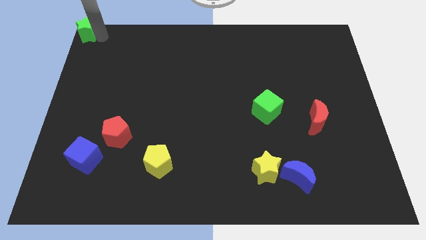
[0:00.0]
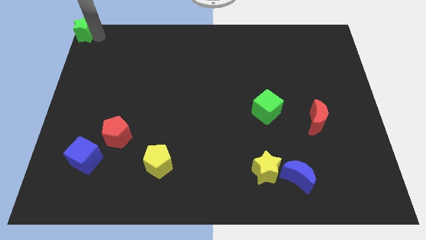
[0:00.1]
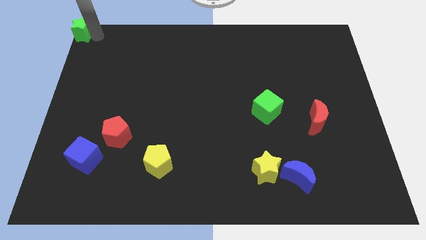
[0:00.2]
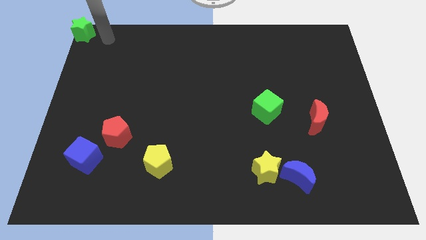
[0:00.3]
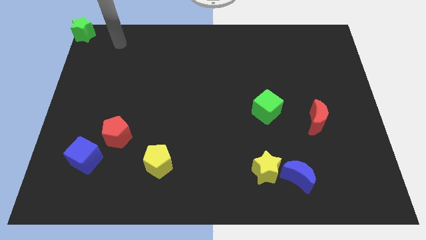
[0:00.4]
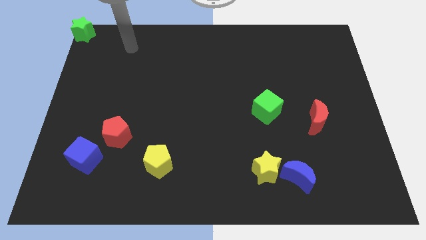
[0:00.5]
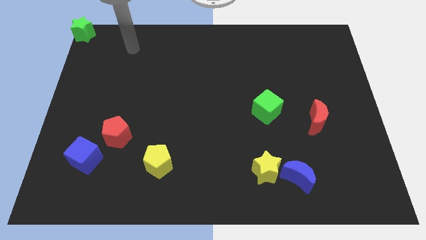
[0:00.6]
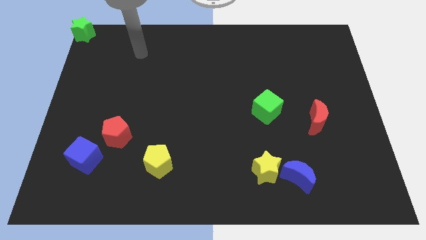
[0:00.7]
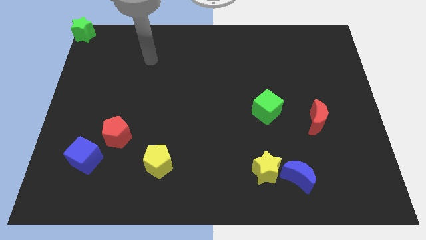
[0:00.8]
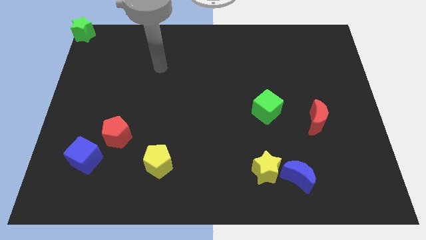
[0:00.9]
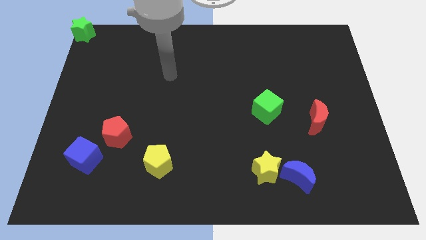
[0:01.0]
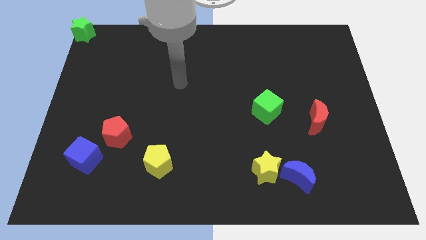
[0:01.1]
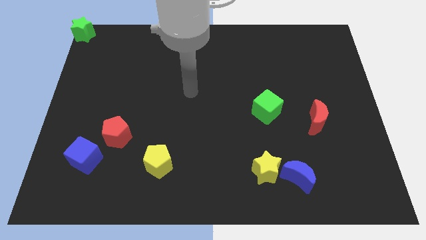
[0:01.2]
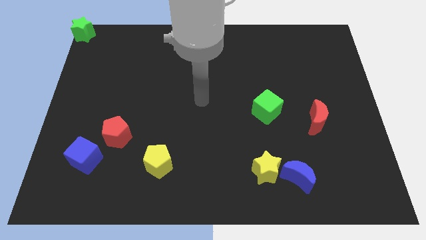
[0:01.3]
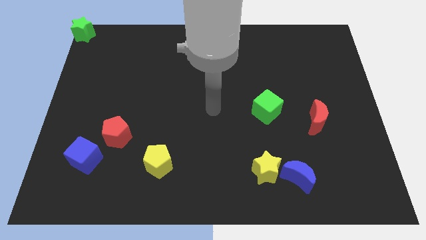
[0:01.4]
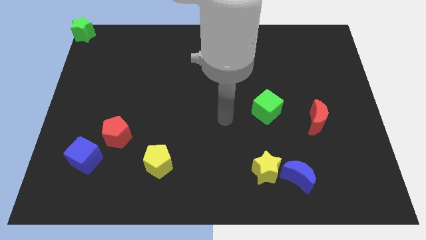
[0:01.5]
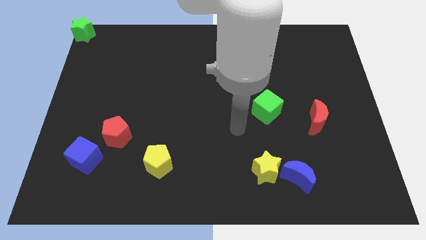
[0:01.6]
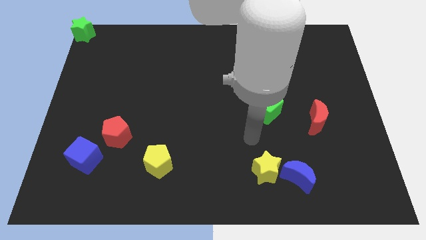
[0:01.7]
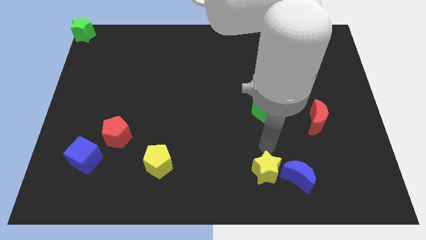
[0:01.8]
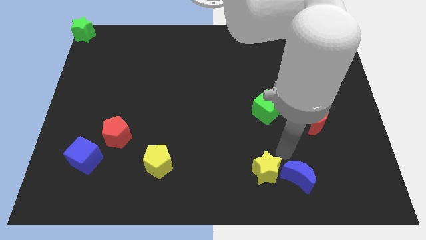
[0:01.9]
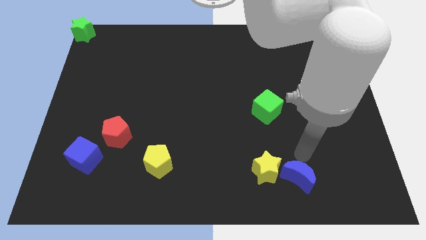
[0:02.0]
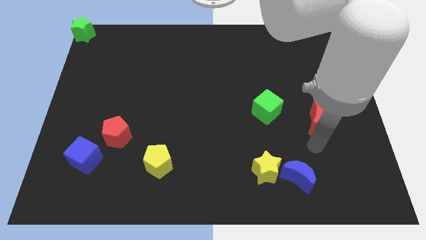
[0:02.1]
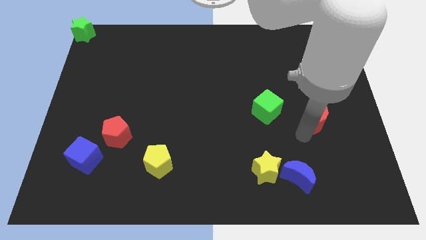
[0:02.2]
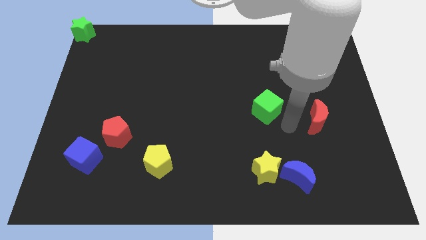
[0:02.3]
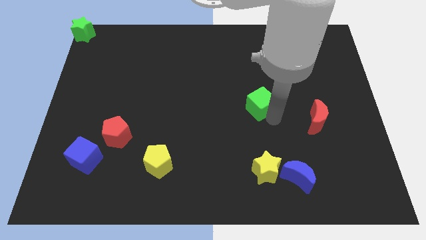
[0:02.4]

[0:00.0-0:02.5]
place your arm to the right of green cube

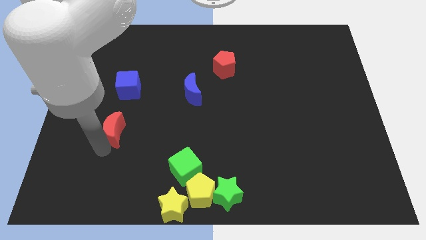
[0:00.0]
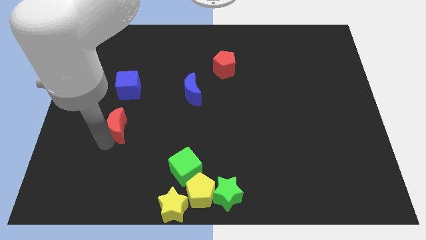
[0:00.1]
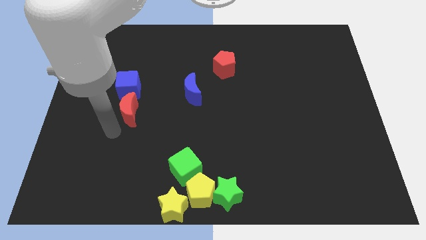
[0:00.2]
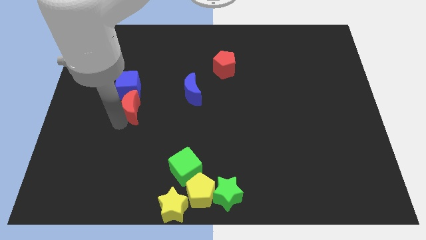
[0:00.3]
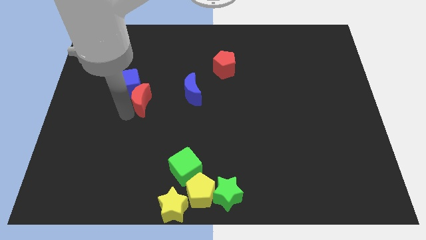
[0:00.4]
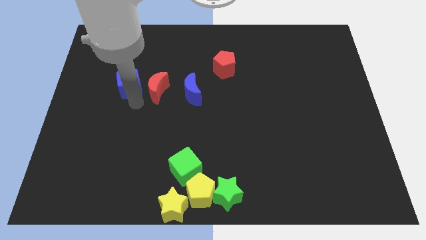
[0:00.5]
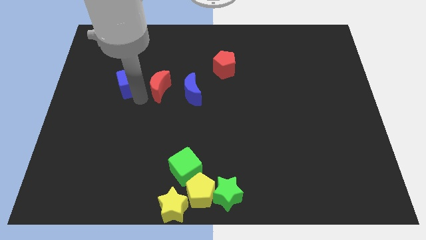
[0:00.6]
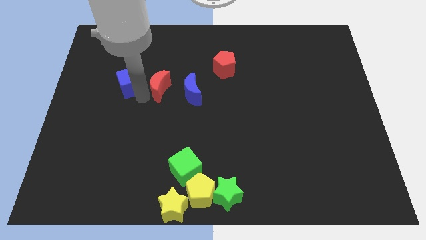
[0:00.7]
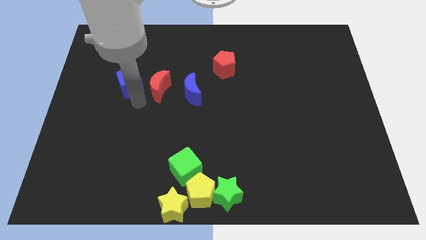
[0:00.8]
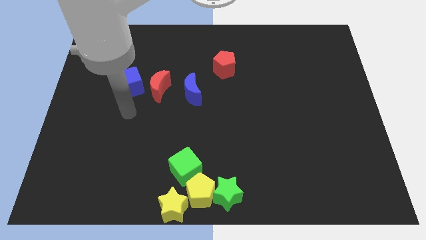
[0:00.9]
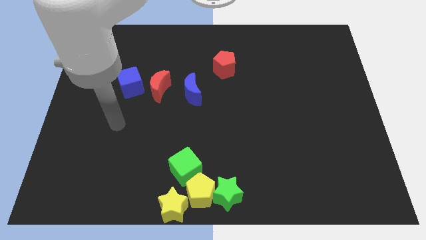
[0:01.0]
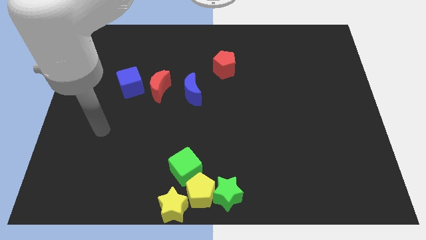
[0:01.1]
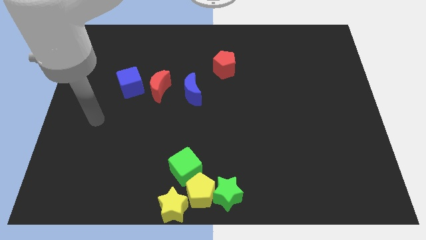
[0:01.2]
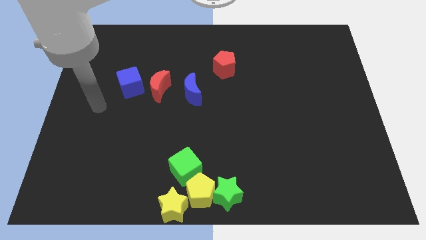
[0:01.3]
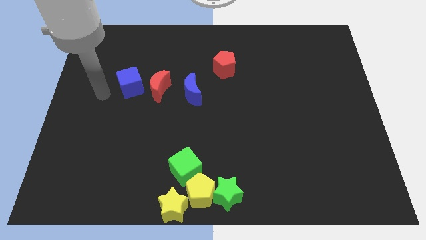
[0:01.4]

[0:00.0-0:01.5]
place red moon beside blue cube

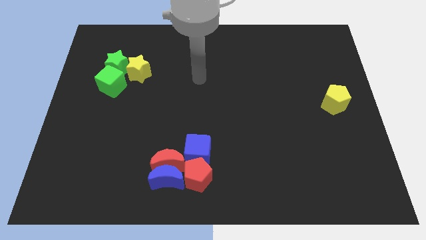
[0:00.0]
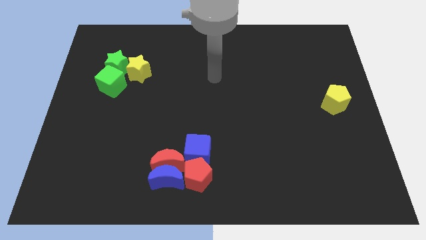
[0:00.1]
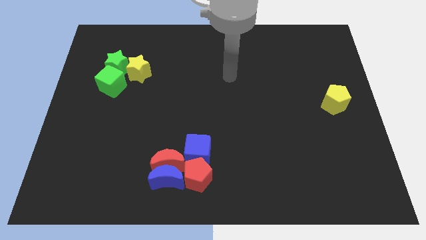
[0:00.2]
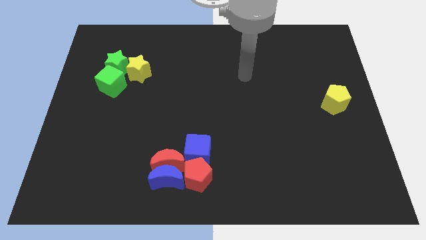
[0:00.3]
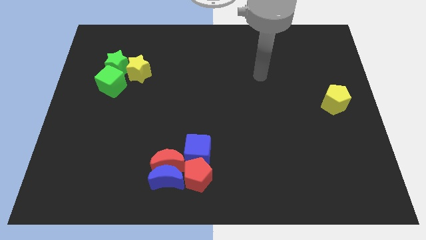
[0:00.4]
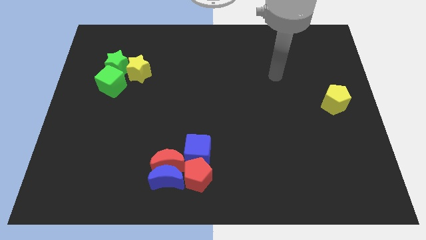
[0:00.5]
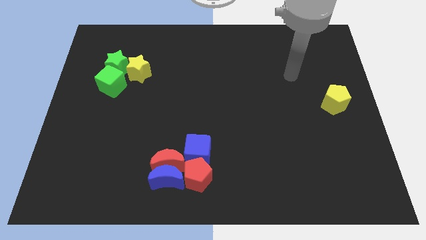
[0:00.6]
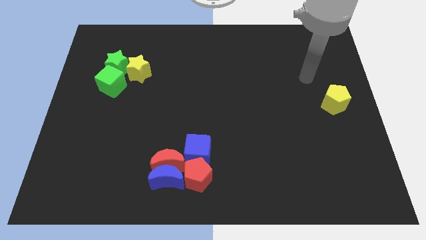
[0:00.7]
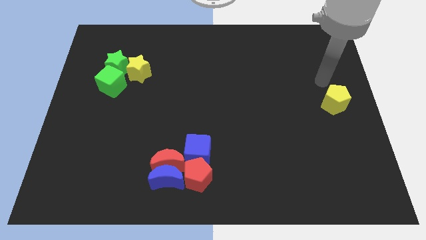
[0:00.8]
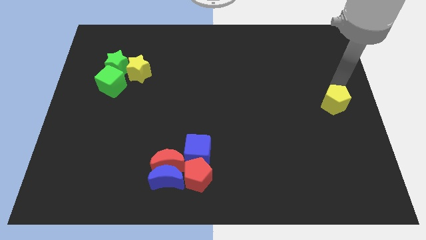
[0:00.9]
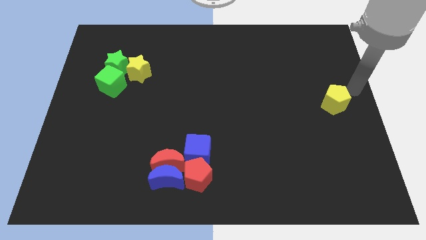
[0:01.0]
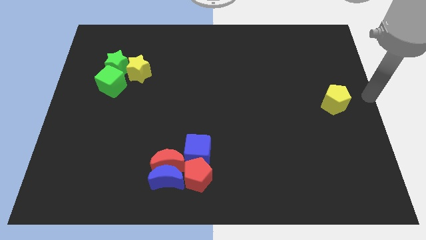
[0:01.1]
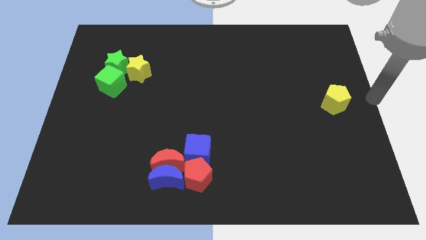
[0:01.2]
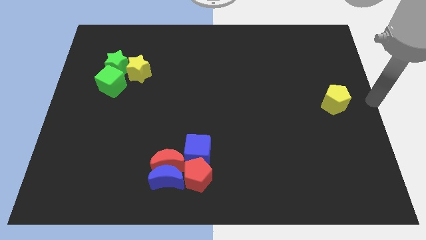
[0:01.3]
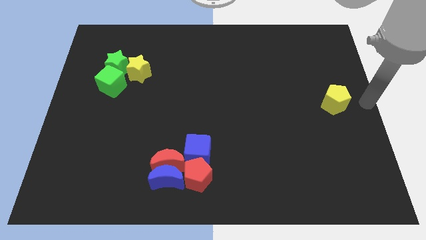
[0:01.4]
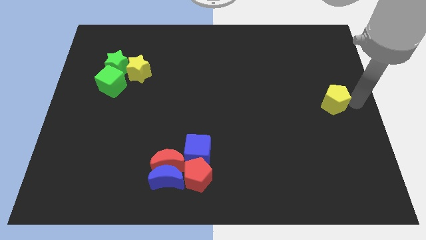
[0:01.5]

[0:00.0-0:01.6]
point your arm towards the right side of the yellow pentagon

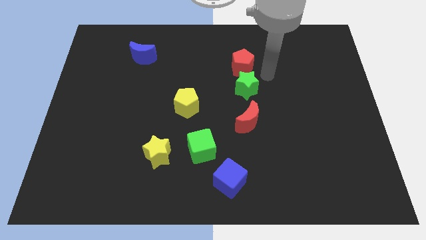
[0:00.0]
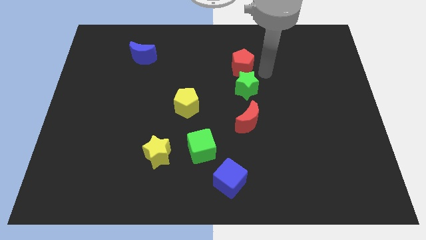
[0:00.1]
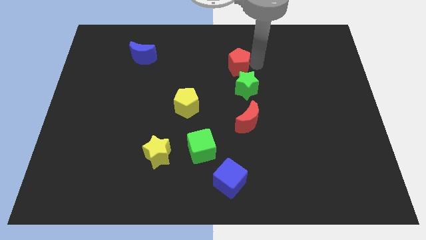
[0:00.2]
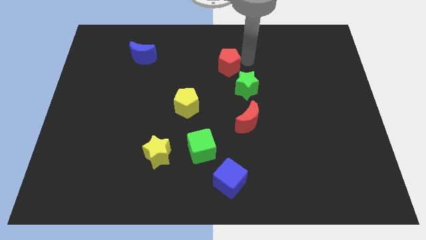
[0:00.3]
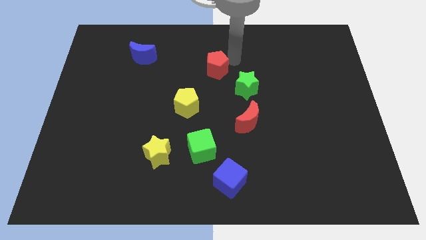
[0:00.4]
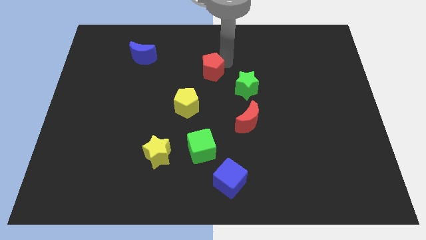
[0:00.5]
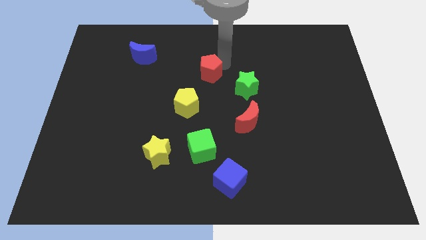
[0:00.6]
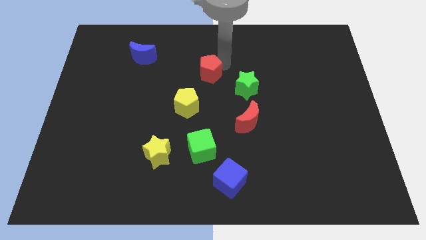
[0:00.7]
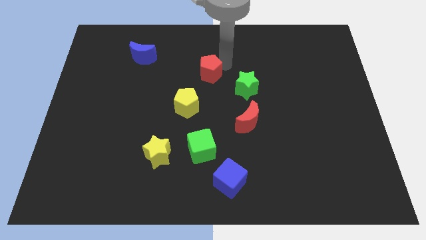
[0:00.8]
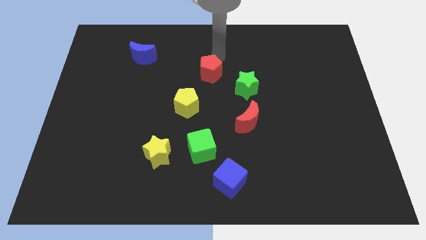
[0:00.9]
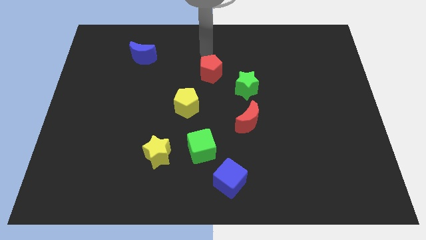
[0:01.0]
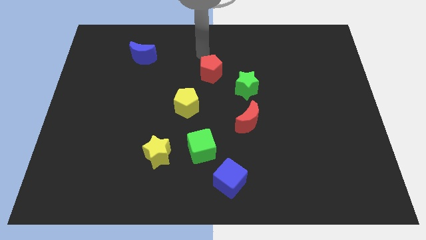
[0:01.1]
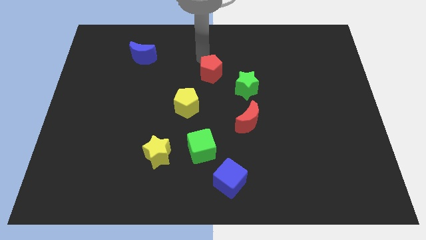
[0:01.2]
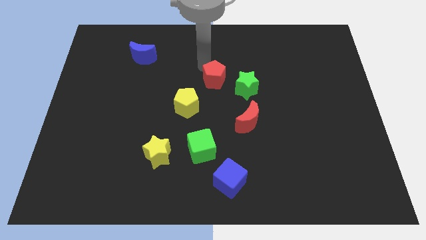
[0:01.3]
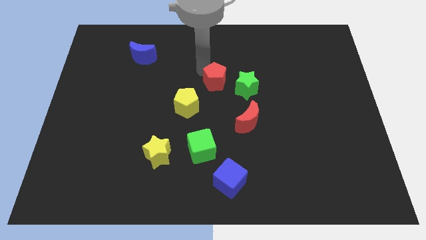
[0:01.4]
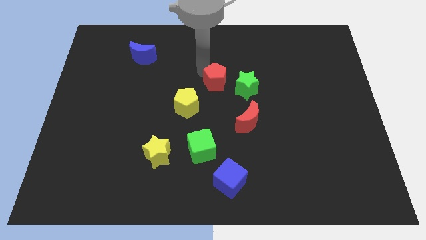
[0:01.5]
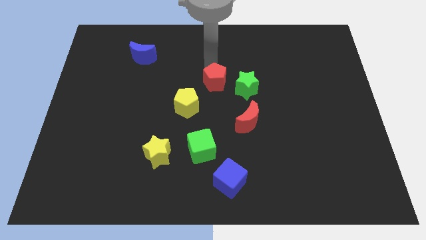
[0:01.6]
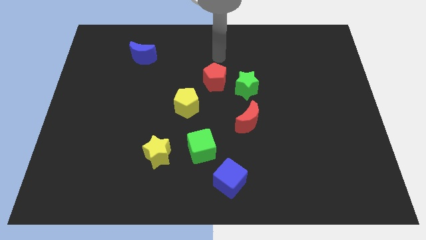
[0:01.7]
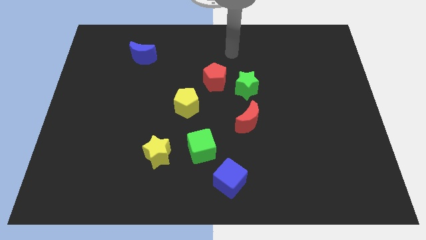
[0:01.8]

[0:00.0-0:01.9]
move the red pentagon to the left side of the green star

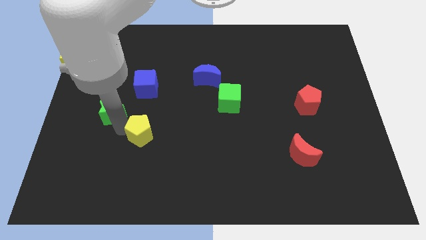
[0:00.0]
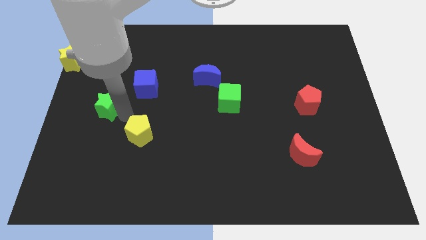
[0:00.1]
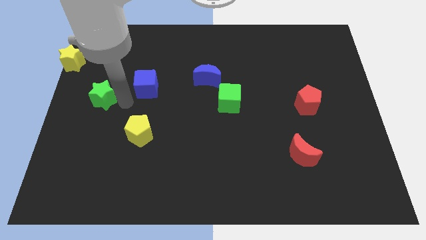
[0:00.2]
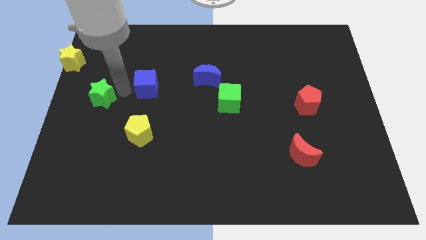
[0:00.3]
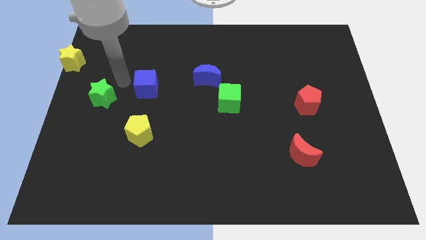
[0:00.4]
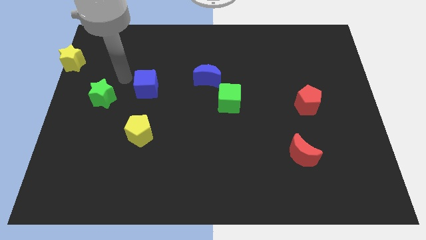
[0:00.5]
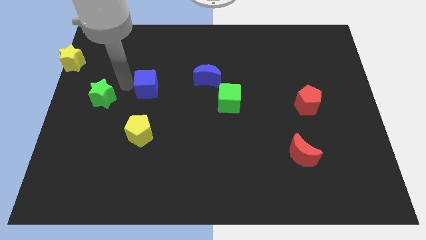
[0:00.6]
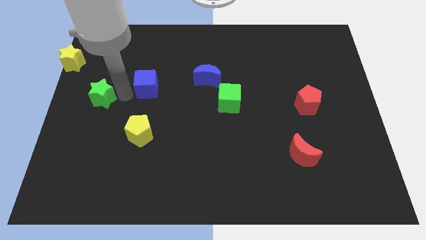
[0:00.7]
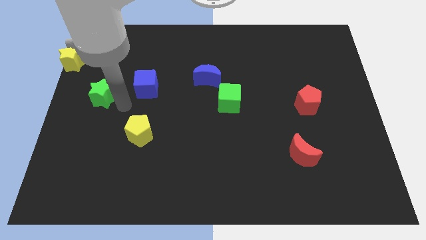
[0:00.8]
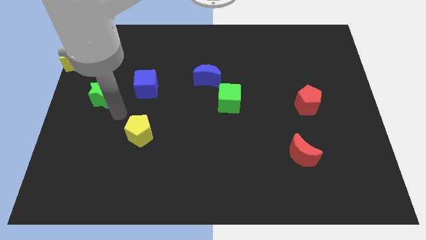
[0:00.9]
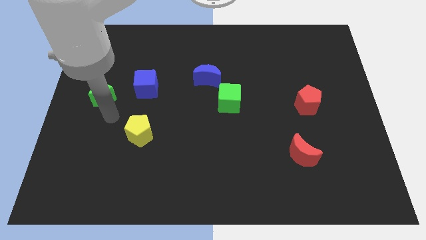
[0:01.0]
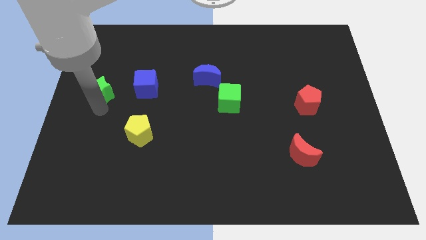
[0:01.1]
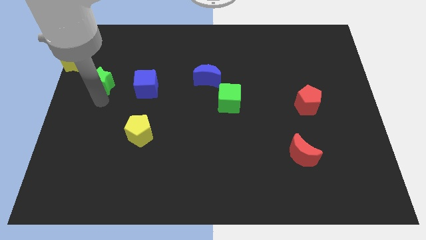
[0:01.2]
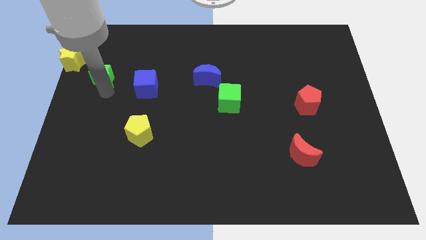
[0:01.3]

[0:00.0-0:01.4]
push the green star to the left of the blue cube
